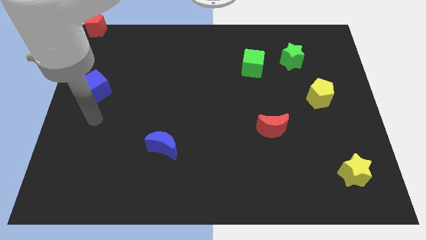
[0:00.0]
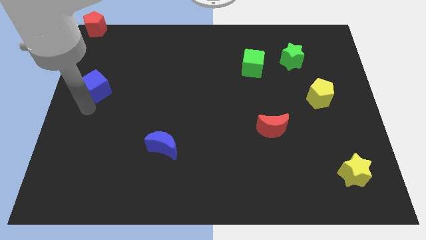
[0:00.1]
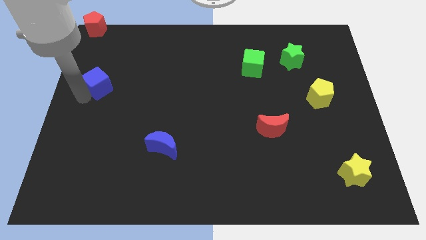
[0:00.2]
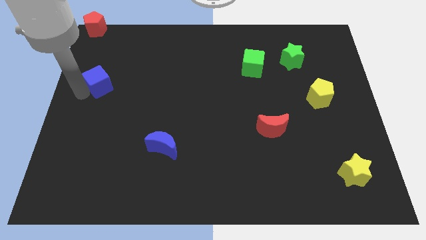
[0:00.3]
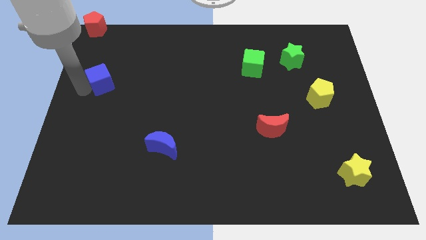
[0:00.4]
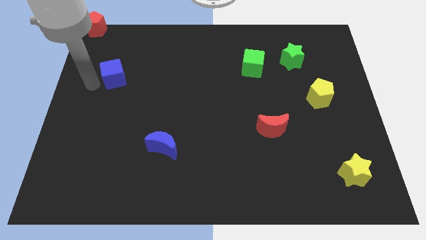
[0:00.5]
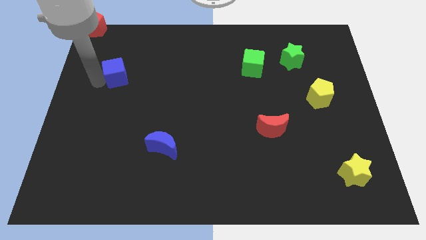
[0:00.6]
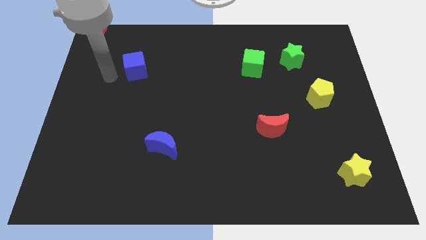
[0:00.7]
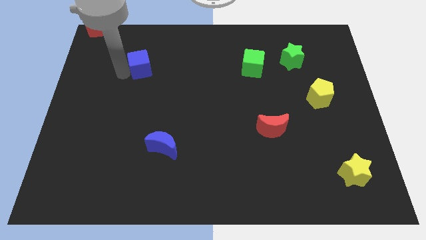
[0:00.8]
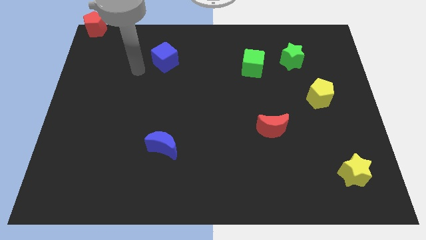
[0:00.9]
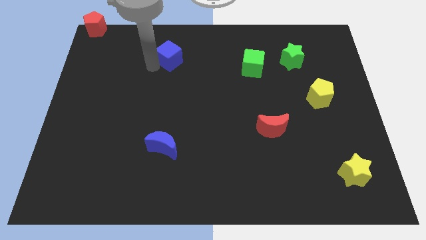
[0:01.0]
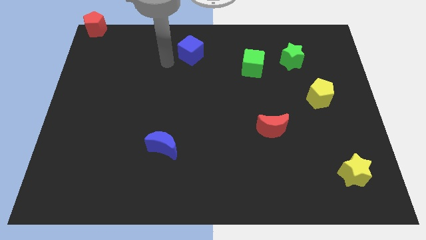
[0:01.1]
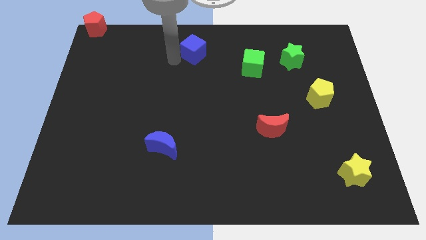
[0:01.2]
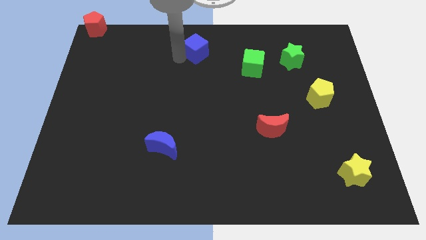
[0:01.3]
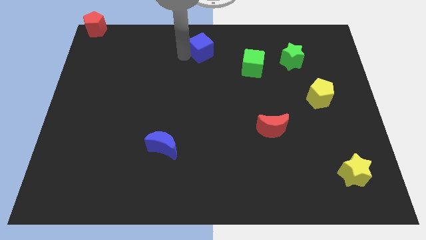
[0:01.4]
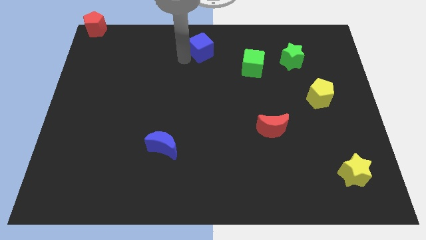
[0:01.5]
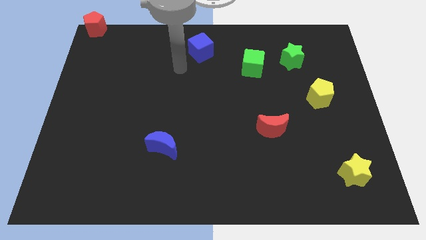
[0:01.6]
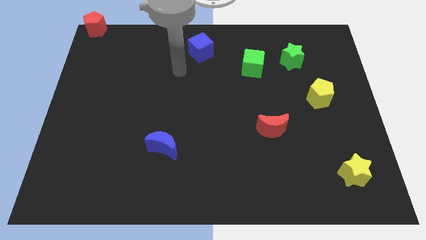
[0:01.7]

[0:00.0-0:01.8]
move the blue cube diagonally to the top left of the green cube

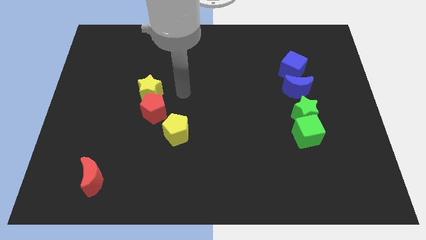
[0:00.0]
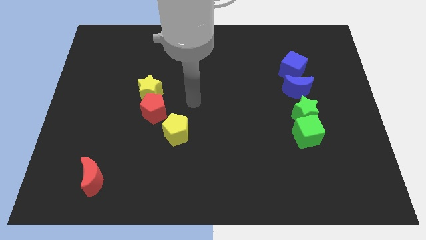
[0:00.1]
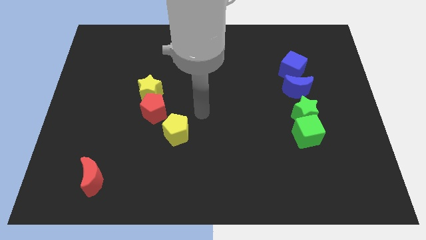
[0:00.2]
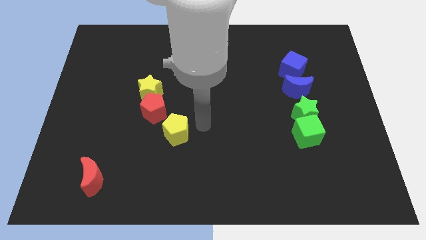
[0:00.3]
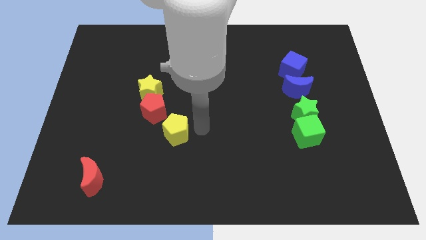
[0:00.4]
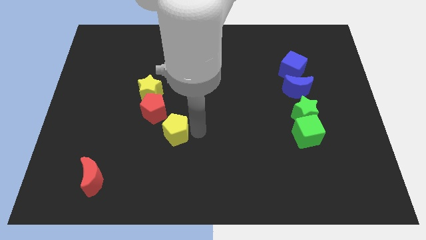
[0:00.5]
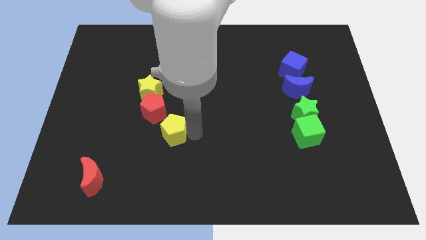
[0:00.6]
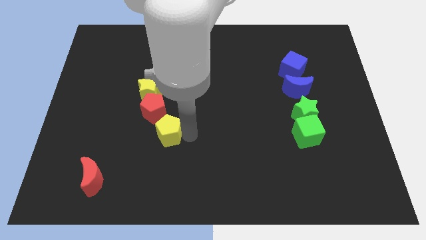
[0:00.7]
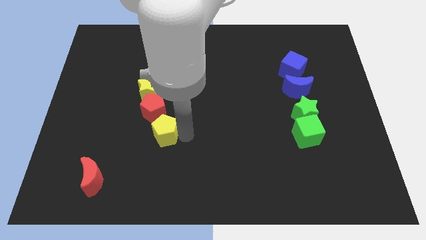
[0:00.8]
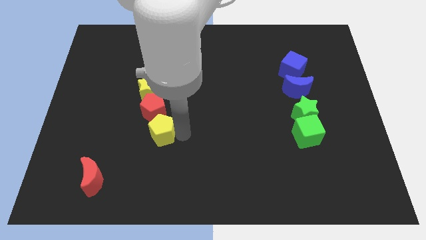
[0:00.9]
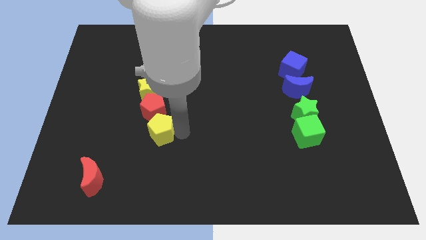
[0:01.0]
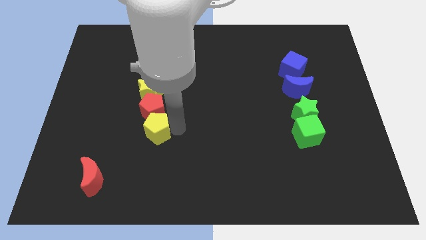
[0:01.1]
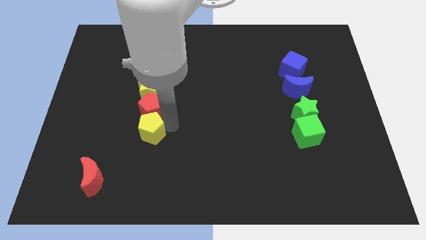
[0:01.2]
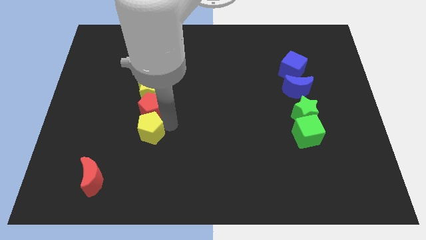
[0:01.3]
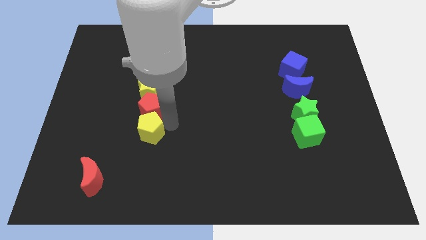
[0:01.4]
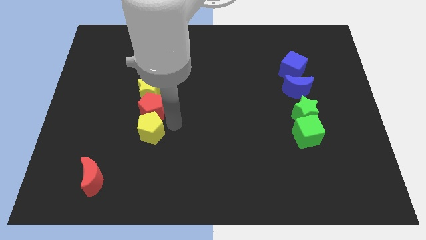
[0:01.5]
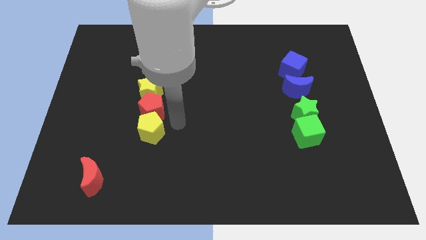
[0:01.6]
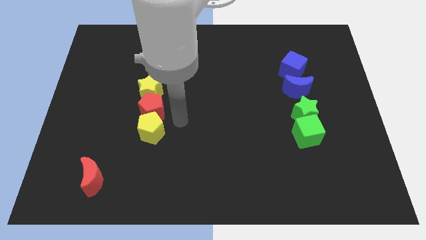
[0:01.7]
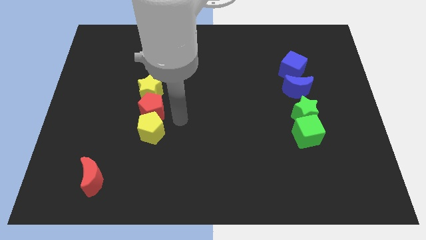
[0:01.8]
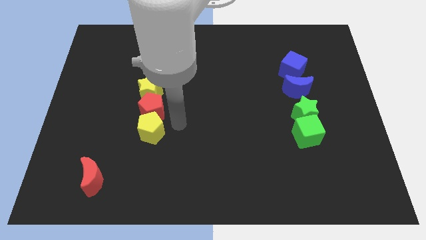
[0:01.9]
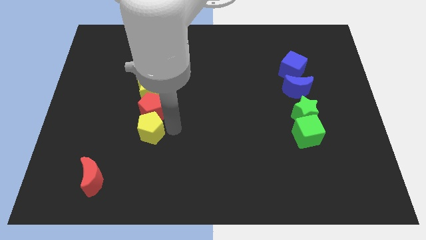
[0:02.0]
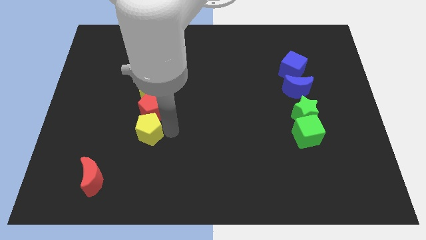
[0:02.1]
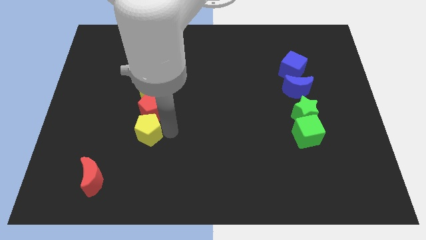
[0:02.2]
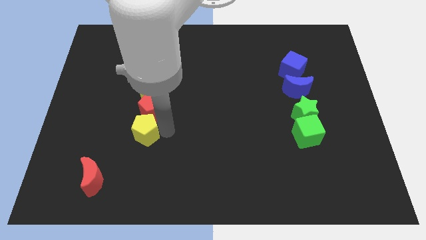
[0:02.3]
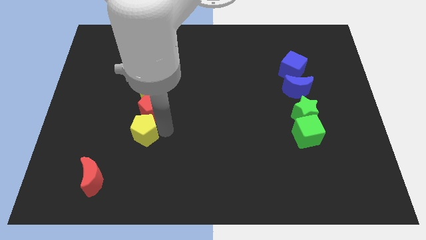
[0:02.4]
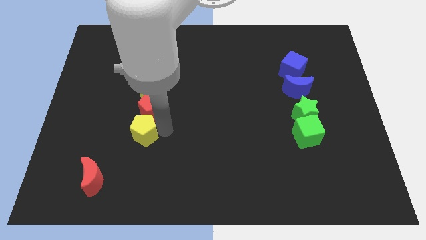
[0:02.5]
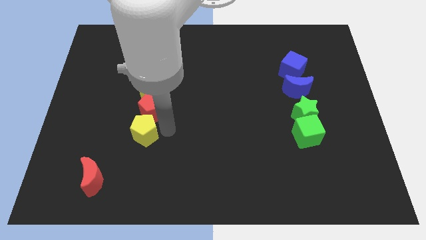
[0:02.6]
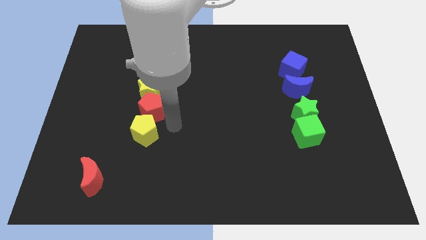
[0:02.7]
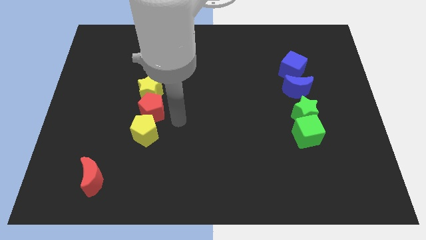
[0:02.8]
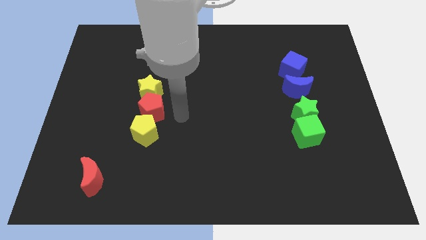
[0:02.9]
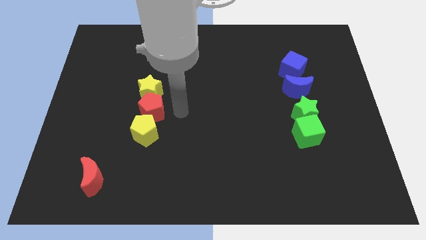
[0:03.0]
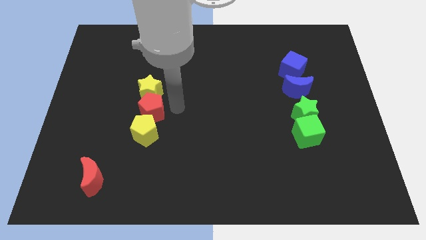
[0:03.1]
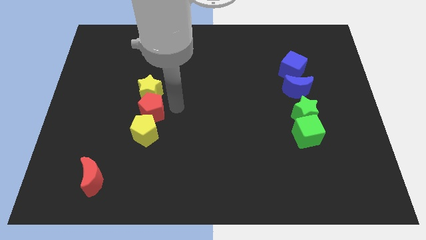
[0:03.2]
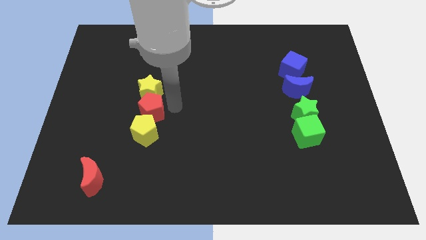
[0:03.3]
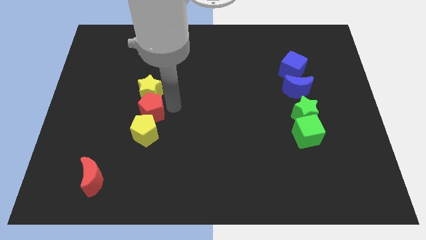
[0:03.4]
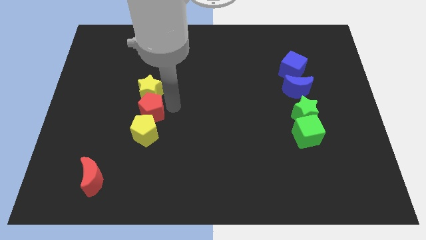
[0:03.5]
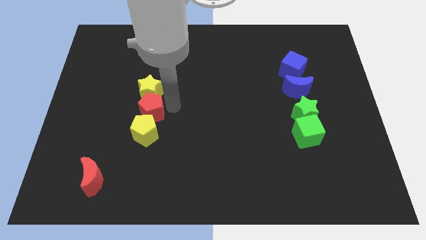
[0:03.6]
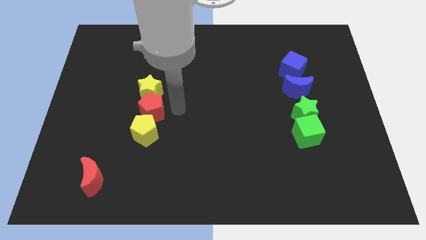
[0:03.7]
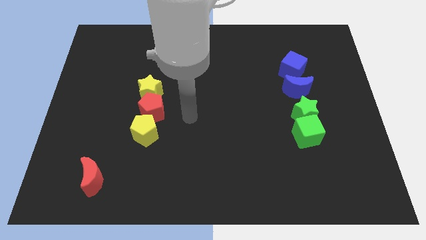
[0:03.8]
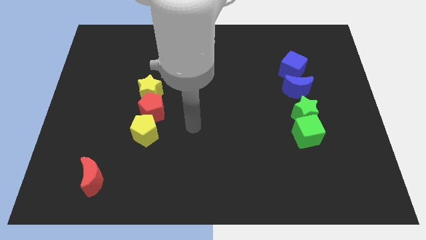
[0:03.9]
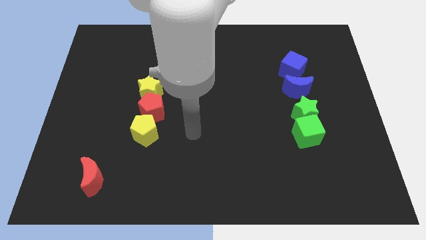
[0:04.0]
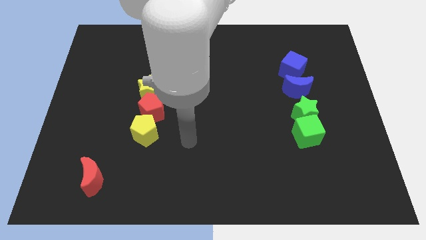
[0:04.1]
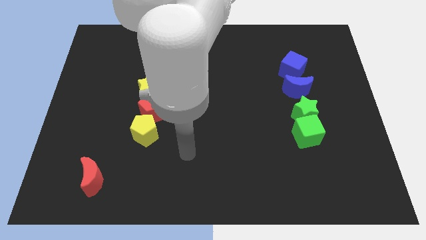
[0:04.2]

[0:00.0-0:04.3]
push the yellow pentagon to the bottom side of the red pentagon

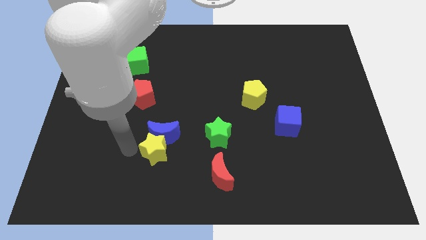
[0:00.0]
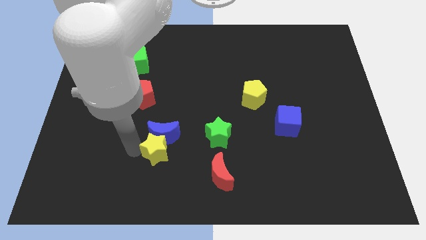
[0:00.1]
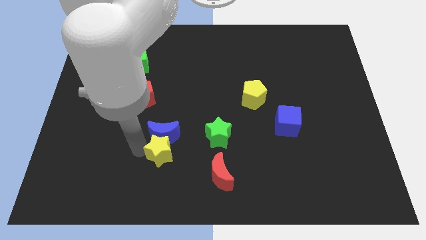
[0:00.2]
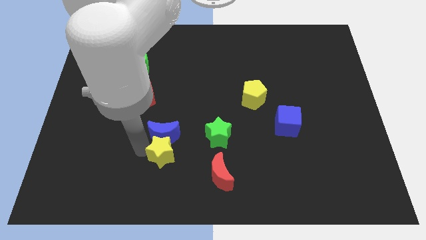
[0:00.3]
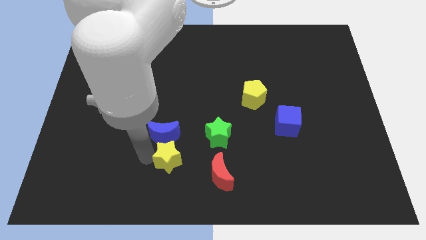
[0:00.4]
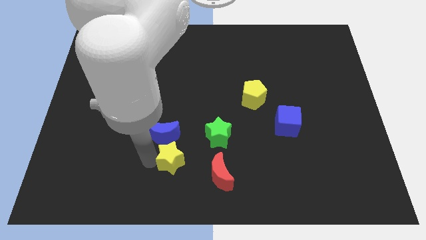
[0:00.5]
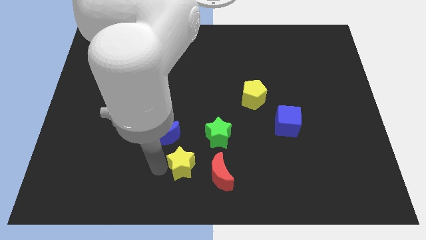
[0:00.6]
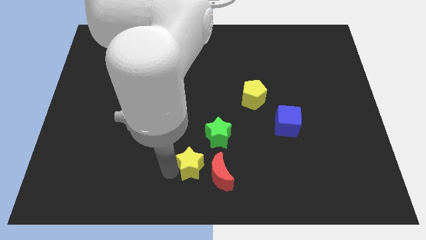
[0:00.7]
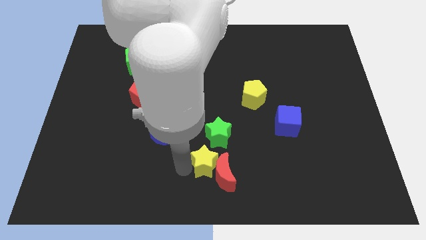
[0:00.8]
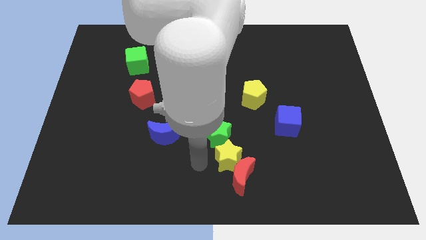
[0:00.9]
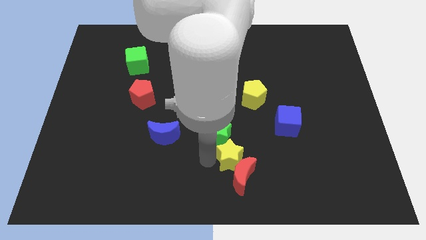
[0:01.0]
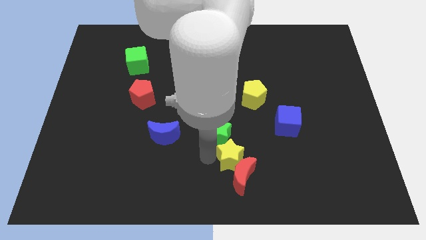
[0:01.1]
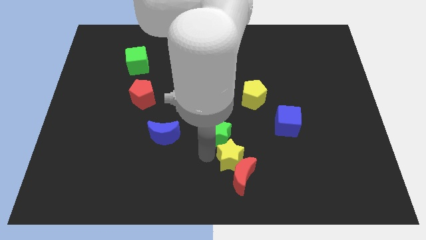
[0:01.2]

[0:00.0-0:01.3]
place the yellow star diagonally in between the red crescent and green star

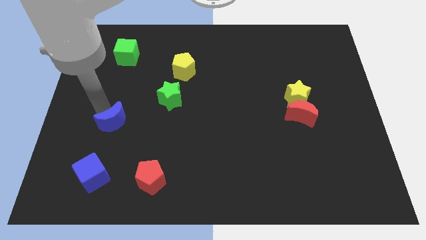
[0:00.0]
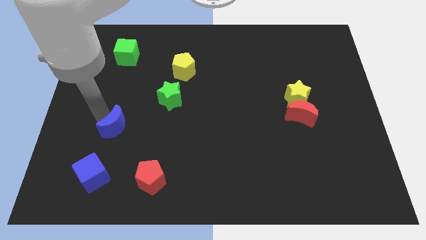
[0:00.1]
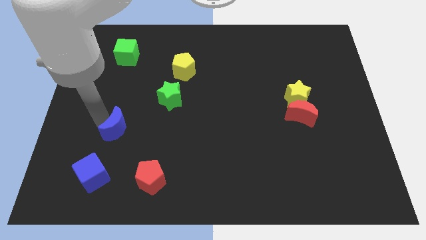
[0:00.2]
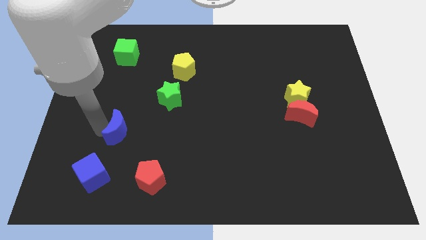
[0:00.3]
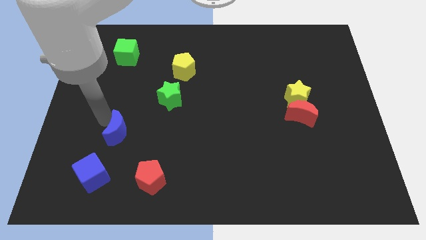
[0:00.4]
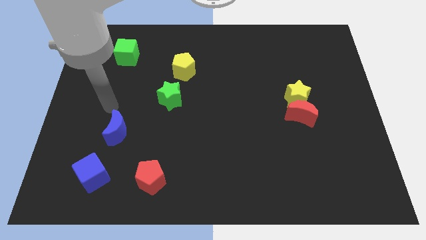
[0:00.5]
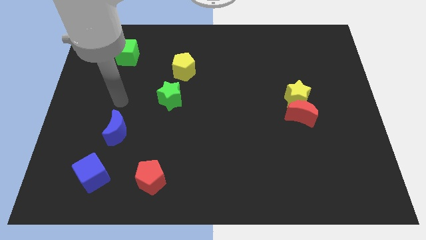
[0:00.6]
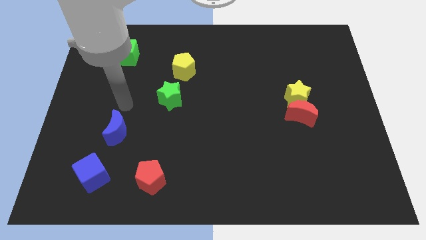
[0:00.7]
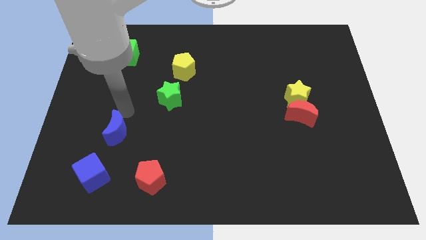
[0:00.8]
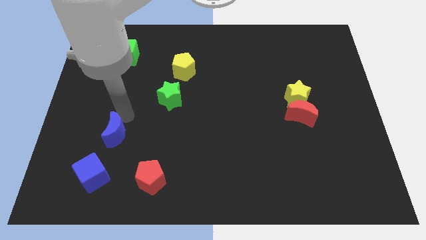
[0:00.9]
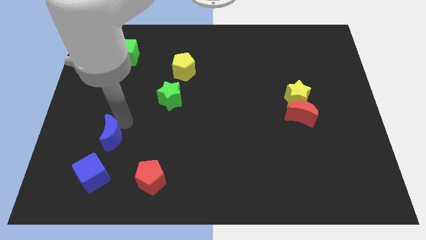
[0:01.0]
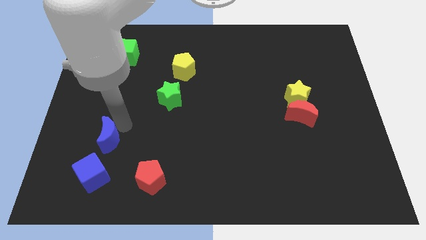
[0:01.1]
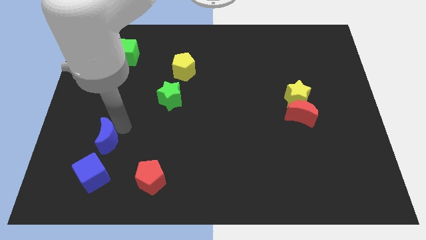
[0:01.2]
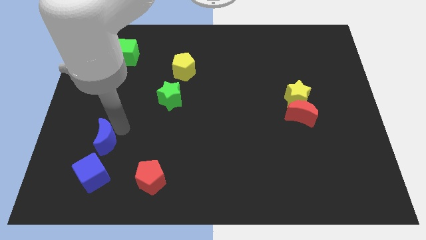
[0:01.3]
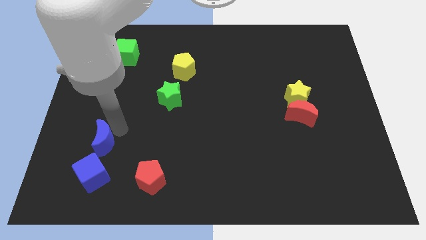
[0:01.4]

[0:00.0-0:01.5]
put the blue moon vertically above the blue cube
